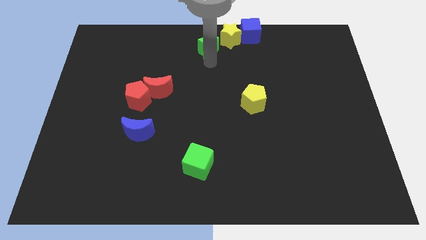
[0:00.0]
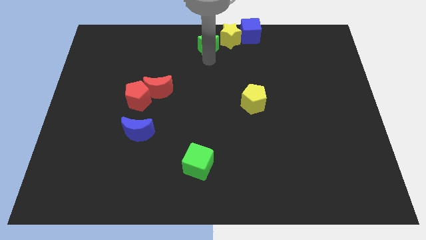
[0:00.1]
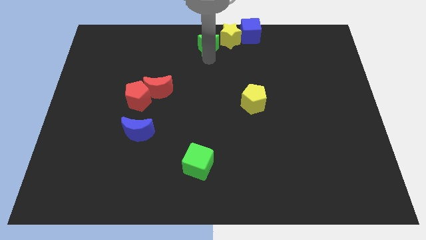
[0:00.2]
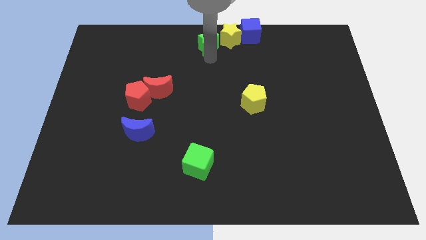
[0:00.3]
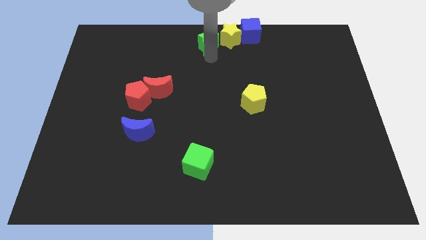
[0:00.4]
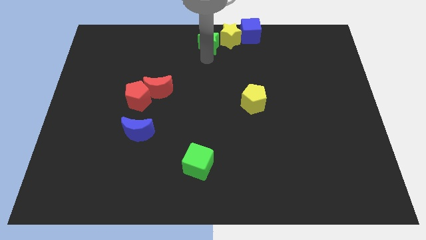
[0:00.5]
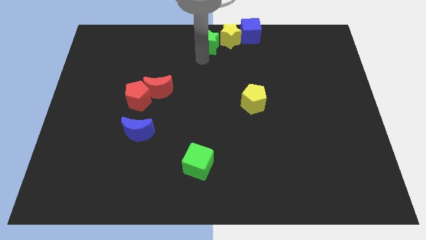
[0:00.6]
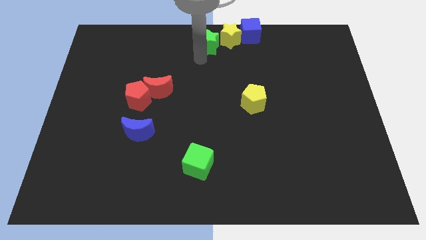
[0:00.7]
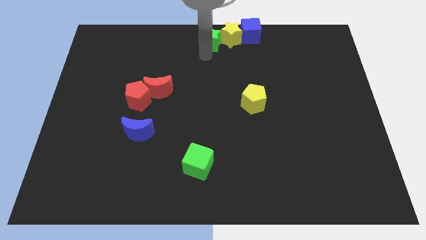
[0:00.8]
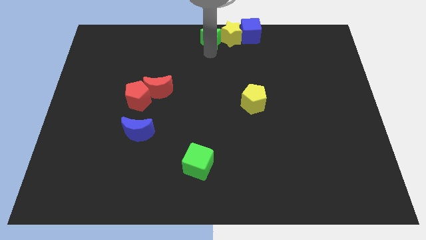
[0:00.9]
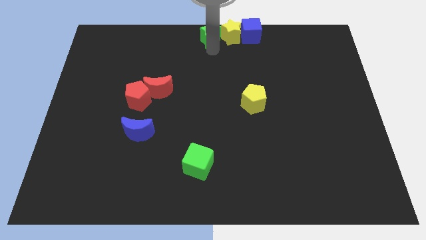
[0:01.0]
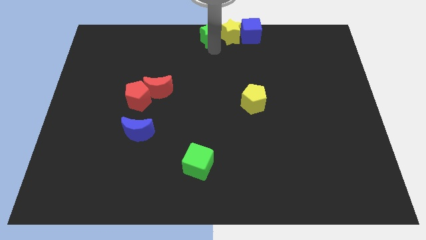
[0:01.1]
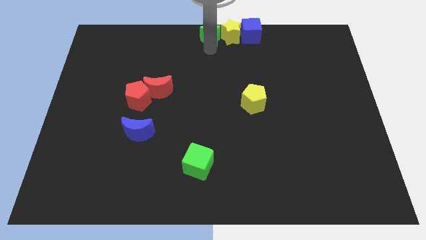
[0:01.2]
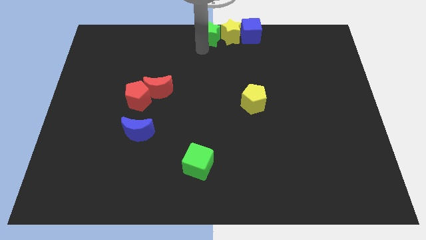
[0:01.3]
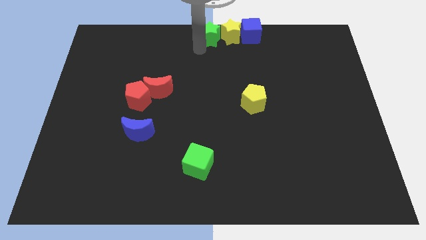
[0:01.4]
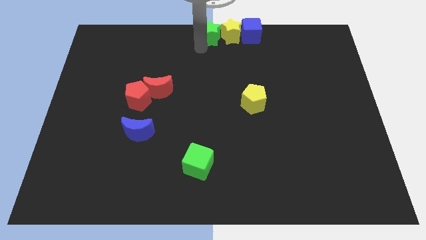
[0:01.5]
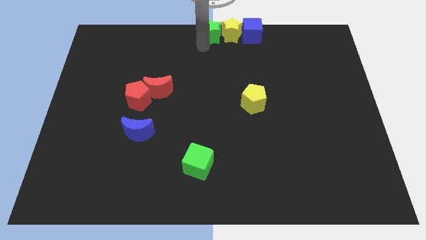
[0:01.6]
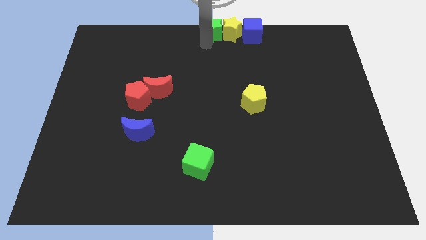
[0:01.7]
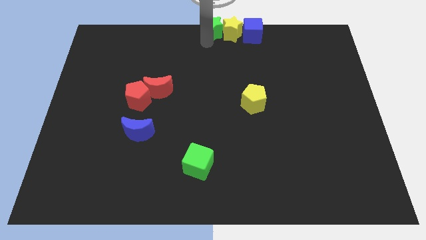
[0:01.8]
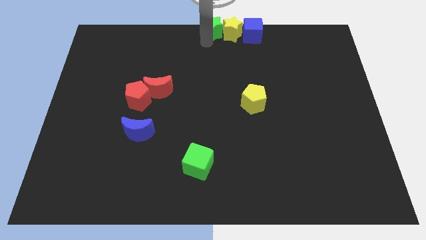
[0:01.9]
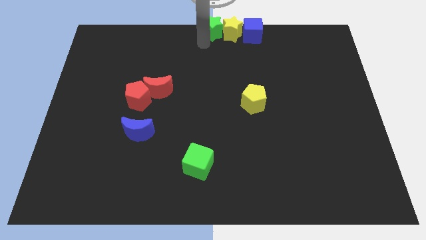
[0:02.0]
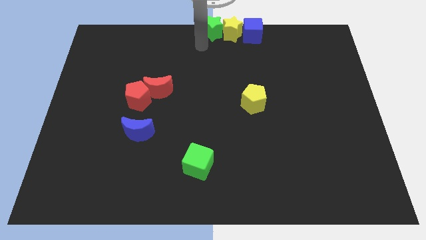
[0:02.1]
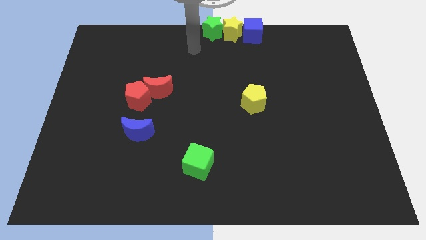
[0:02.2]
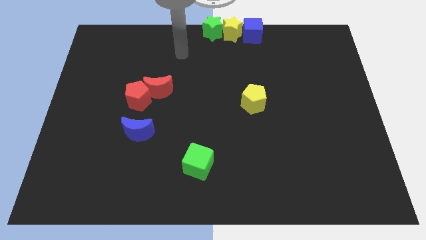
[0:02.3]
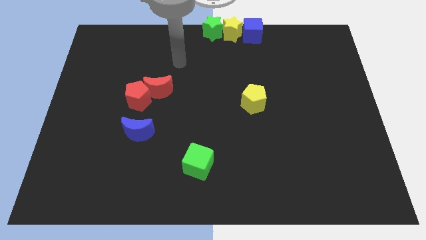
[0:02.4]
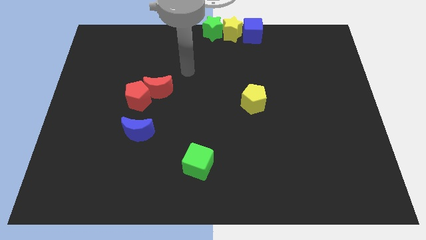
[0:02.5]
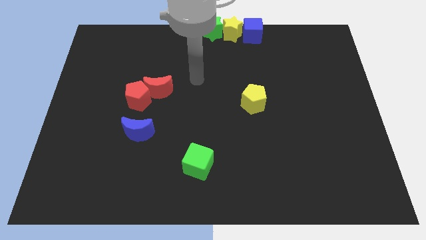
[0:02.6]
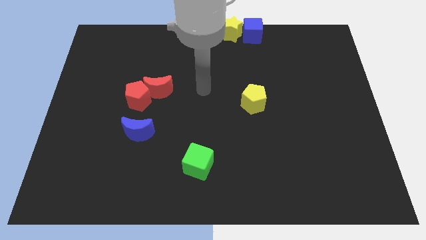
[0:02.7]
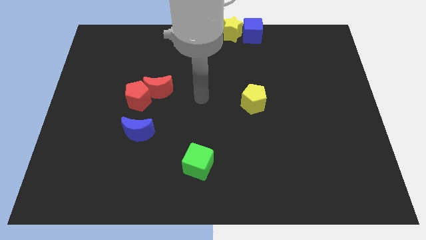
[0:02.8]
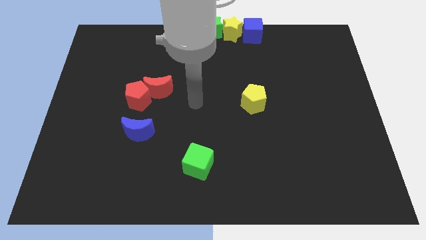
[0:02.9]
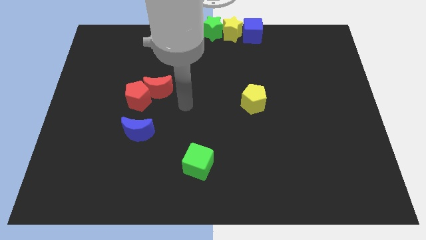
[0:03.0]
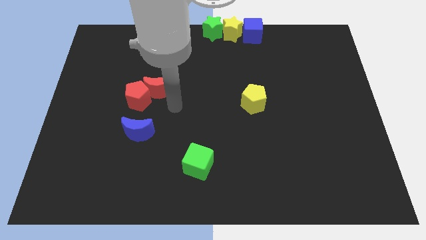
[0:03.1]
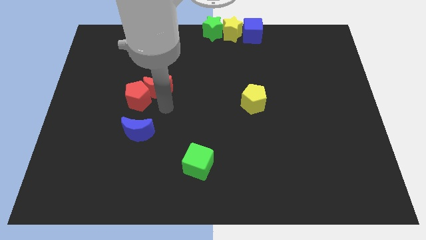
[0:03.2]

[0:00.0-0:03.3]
move the green star left to the yellow star

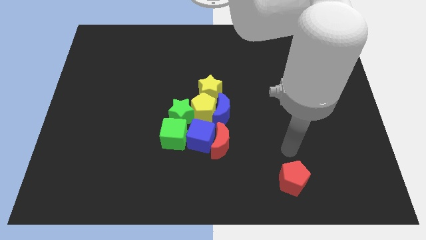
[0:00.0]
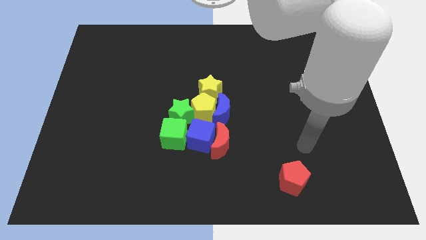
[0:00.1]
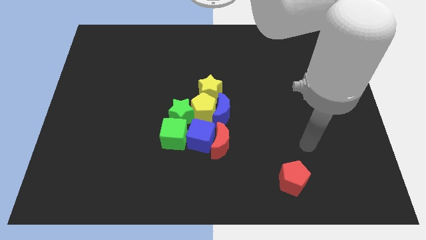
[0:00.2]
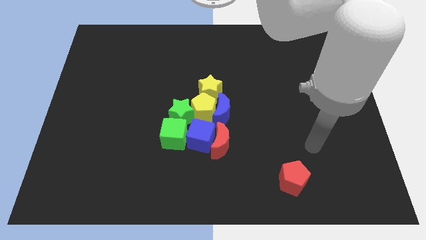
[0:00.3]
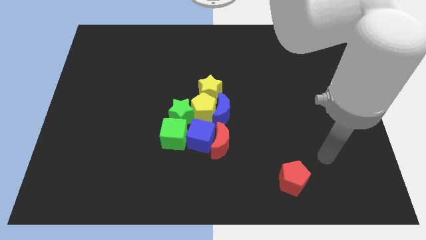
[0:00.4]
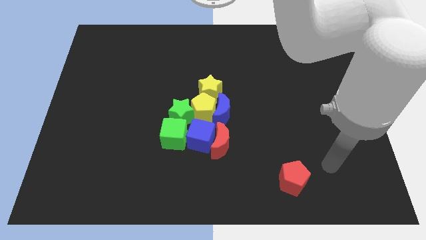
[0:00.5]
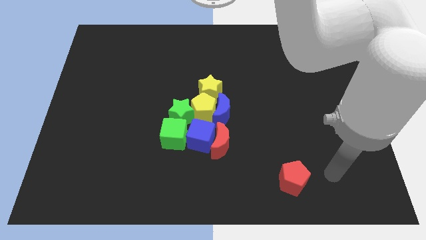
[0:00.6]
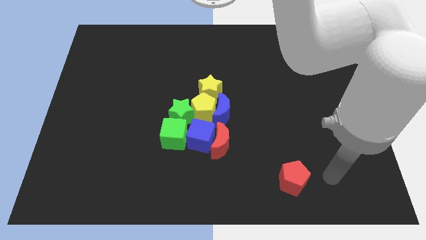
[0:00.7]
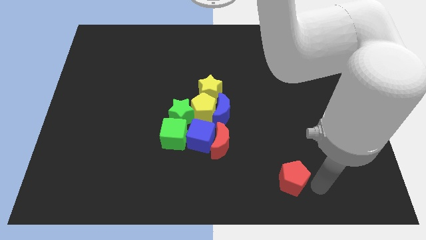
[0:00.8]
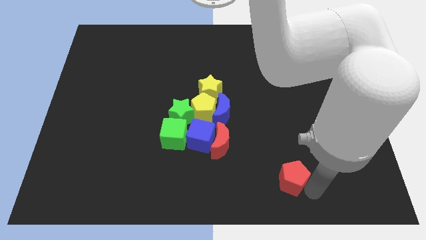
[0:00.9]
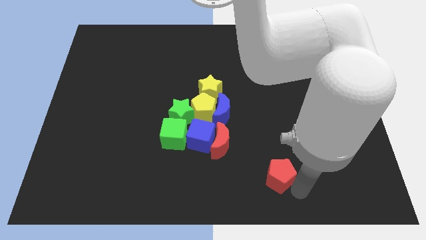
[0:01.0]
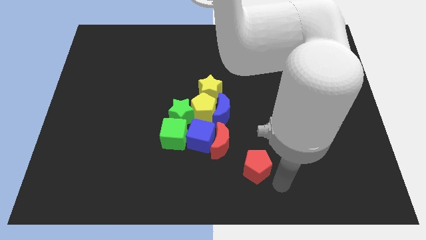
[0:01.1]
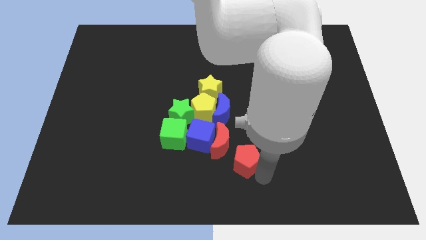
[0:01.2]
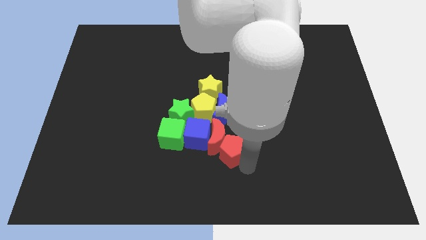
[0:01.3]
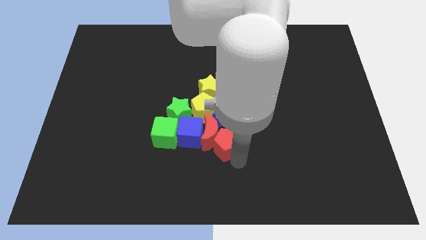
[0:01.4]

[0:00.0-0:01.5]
move the red pentagon into the red moon

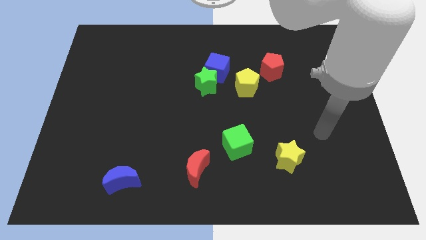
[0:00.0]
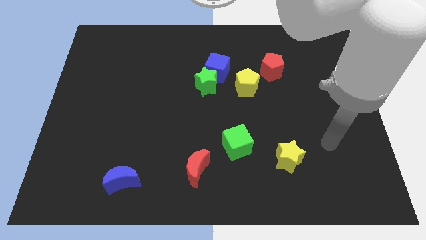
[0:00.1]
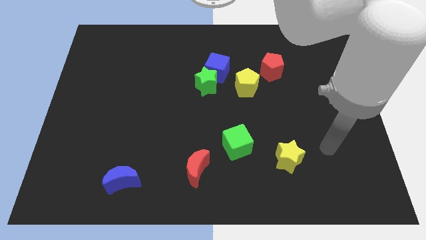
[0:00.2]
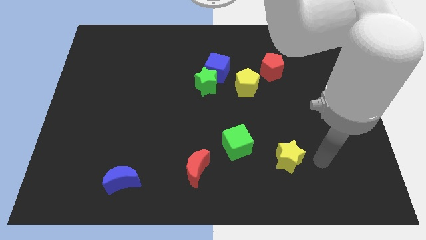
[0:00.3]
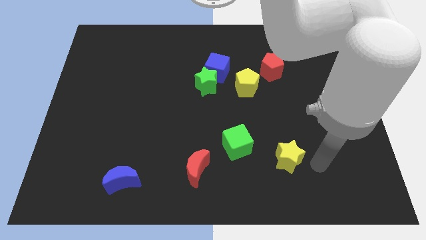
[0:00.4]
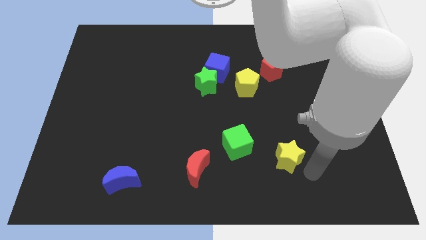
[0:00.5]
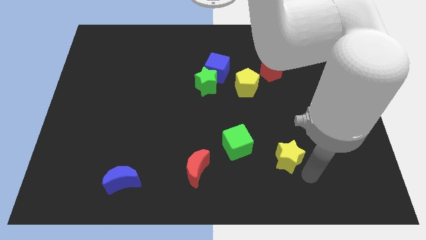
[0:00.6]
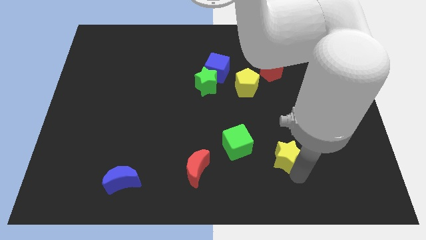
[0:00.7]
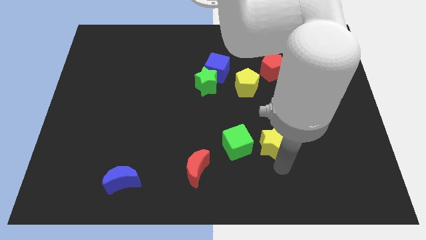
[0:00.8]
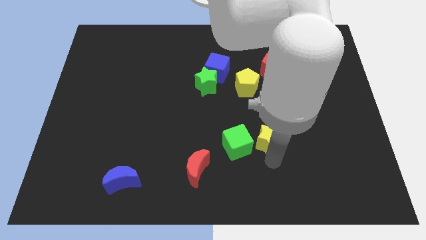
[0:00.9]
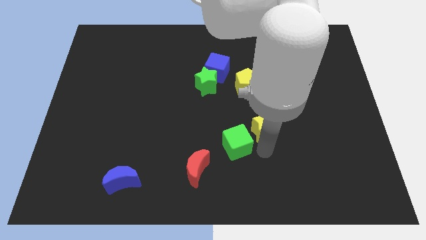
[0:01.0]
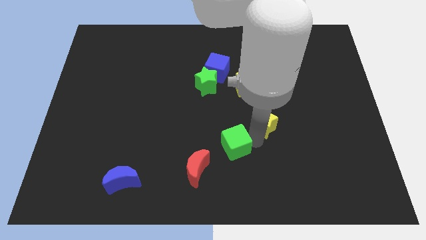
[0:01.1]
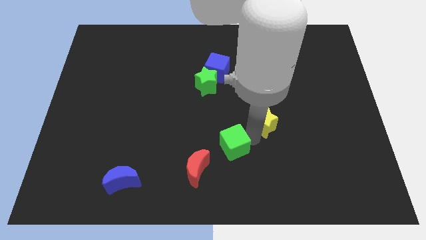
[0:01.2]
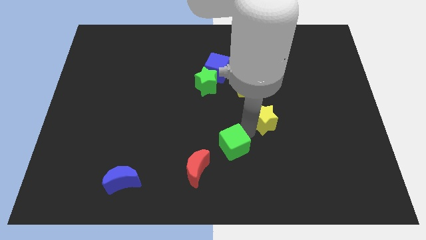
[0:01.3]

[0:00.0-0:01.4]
put the yellow star at the top right of the green cube

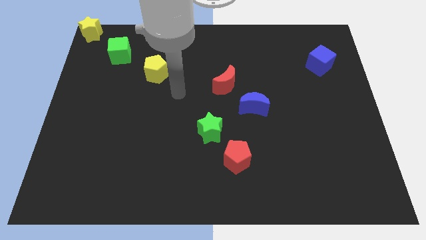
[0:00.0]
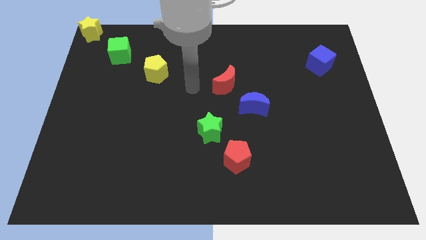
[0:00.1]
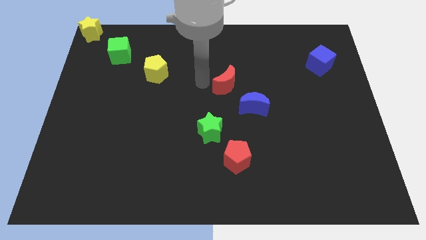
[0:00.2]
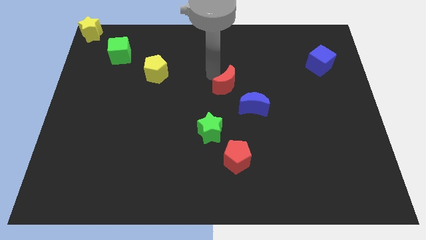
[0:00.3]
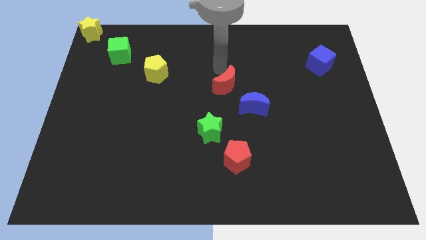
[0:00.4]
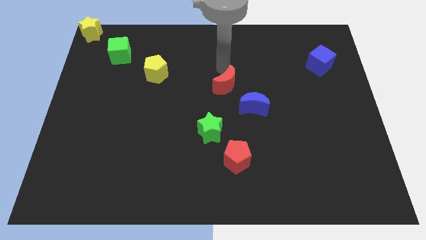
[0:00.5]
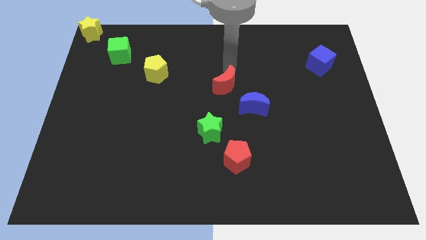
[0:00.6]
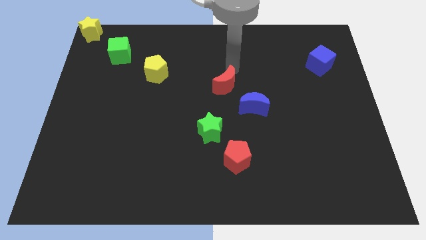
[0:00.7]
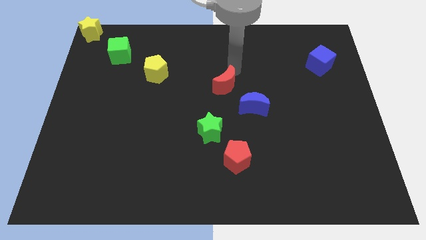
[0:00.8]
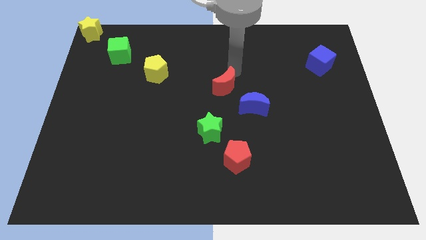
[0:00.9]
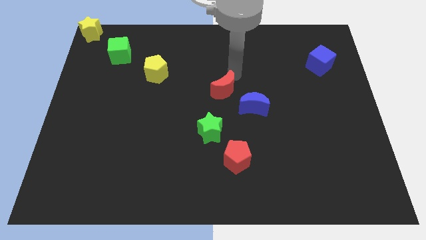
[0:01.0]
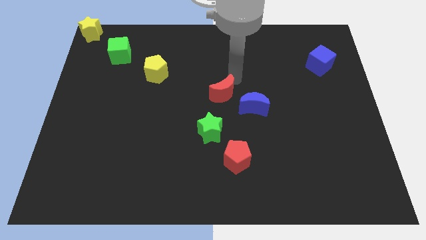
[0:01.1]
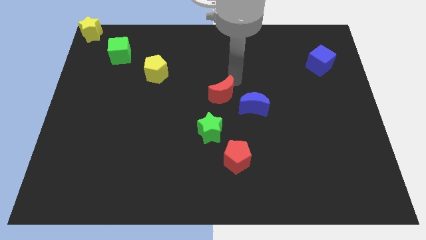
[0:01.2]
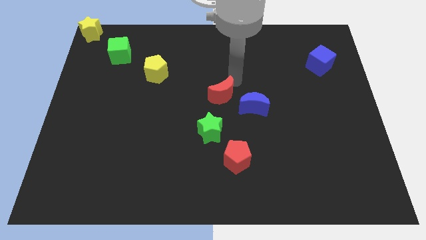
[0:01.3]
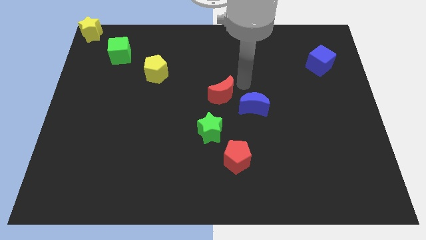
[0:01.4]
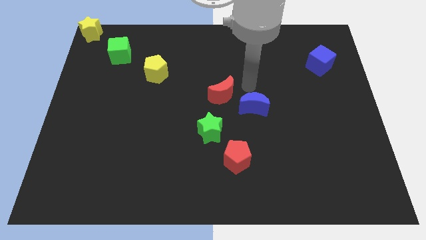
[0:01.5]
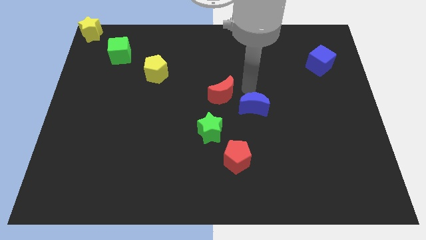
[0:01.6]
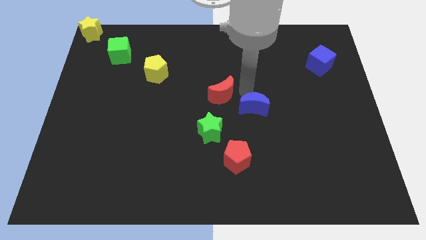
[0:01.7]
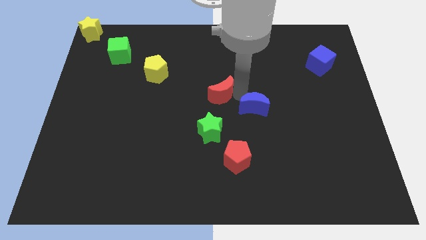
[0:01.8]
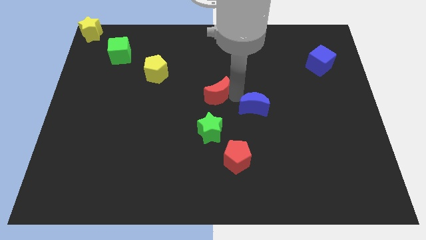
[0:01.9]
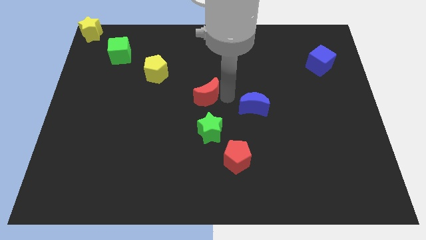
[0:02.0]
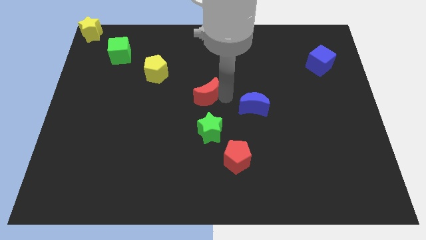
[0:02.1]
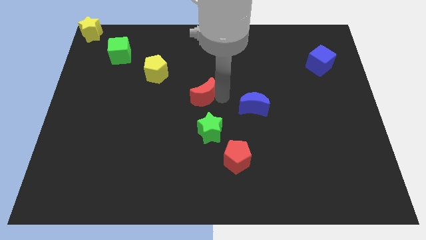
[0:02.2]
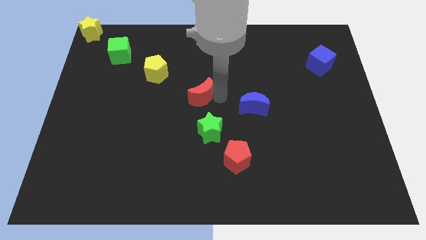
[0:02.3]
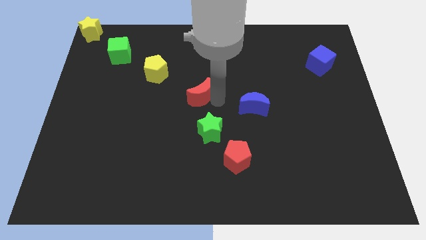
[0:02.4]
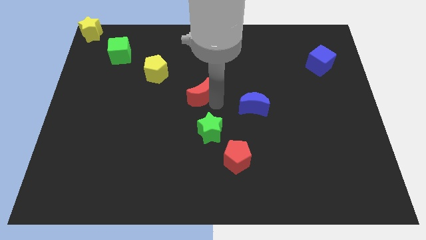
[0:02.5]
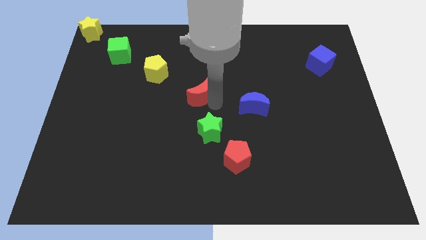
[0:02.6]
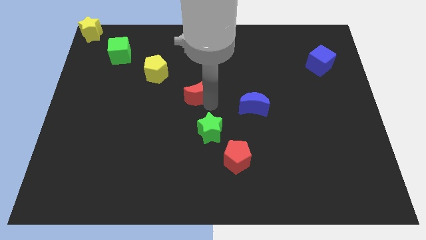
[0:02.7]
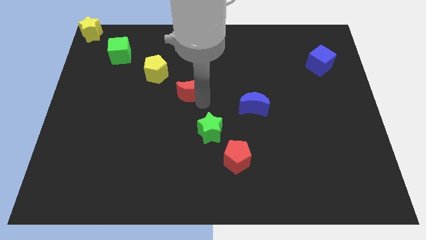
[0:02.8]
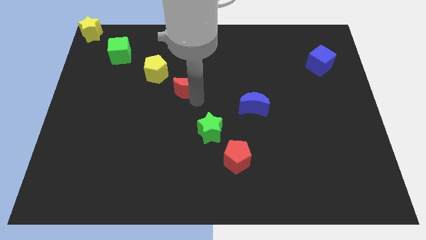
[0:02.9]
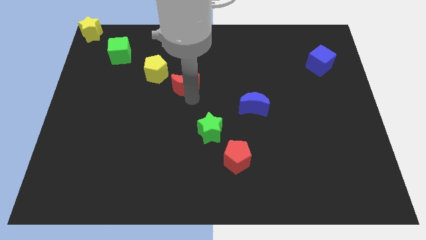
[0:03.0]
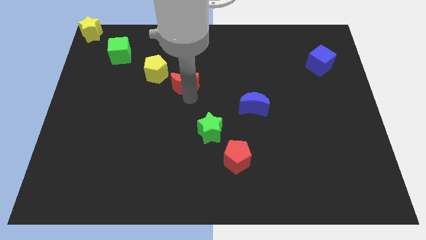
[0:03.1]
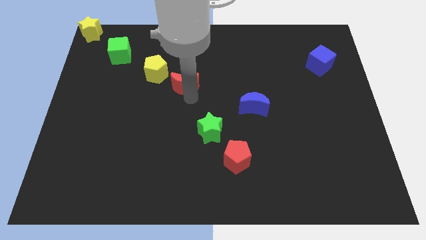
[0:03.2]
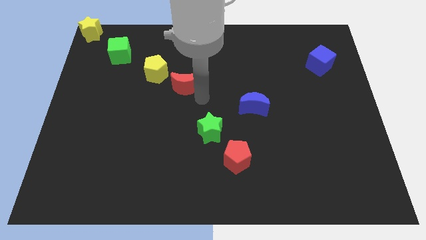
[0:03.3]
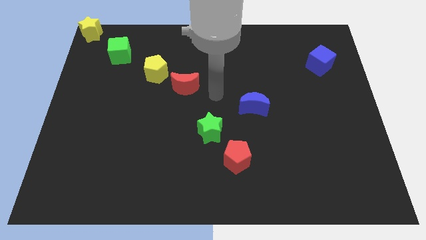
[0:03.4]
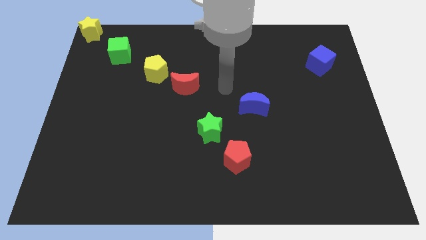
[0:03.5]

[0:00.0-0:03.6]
move the red crescent to the bottom right of the yellow pentagon
